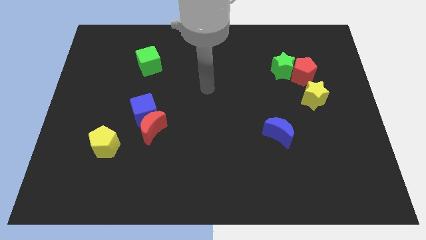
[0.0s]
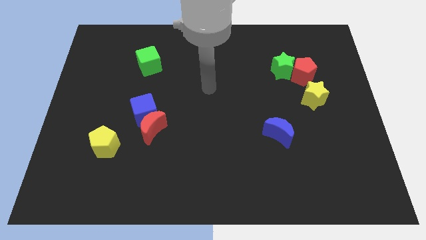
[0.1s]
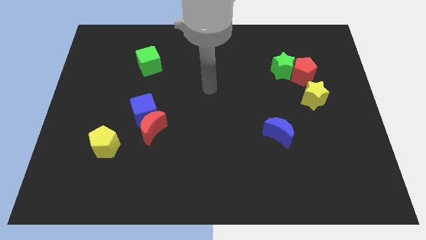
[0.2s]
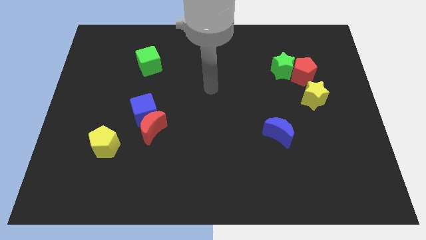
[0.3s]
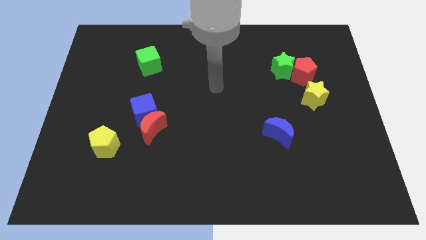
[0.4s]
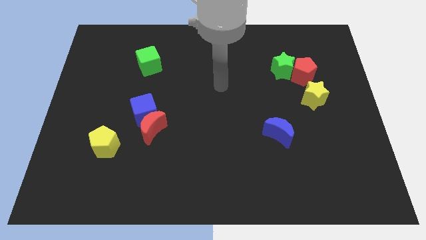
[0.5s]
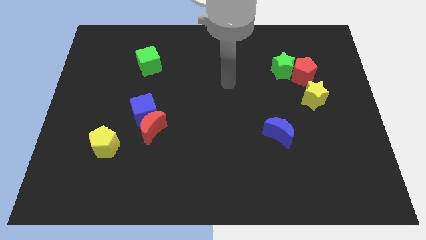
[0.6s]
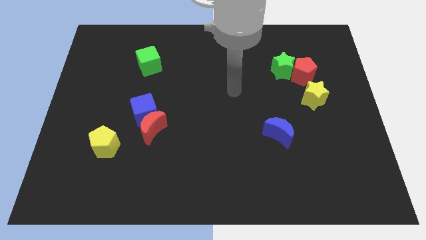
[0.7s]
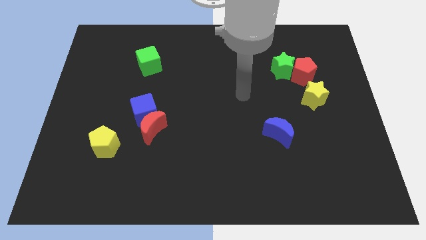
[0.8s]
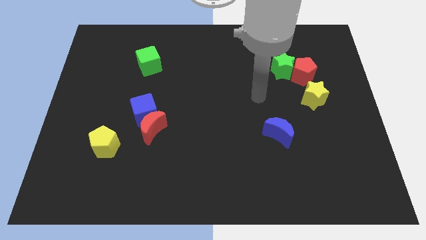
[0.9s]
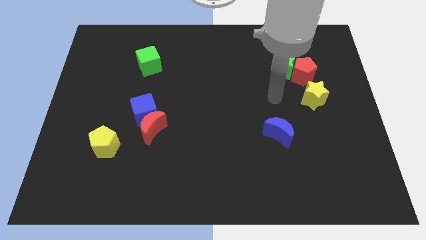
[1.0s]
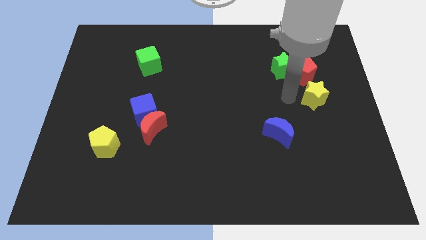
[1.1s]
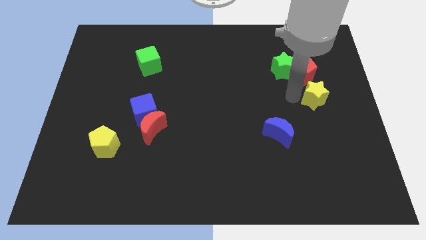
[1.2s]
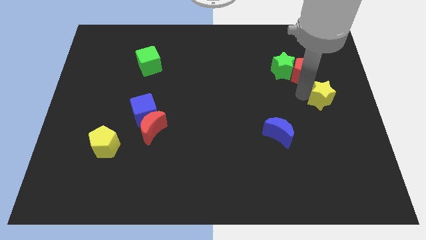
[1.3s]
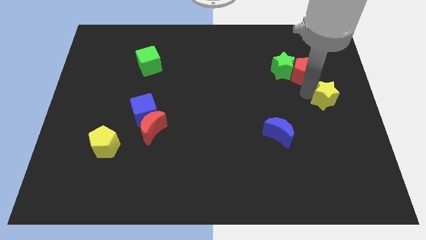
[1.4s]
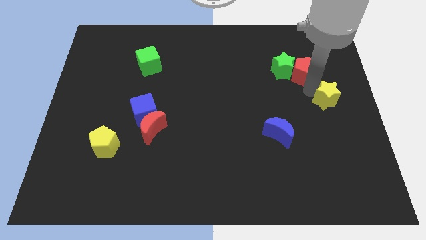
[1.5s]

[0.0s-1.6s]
hit the yellow star

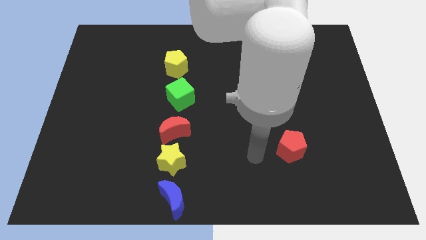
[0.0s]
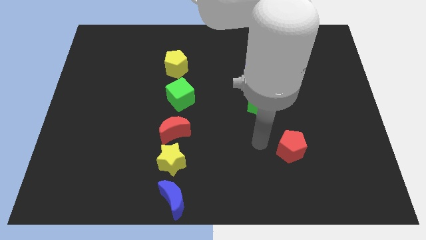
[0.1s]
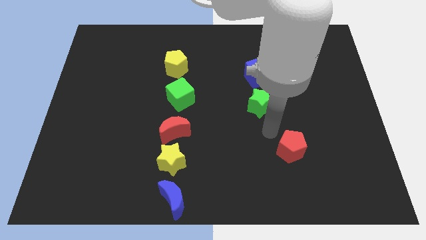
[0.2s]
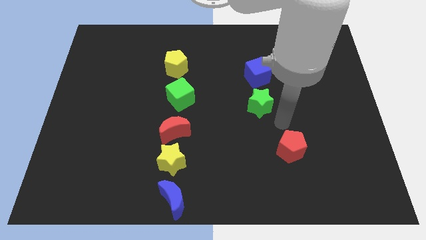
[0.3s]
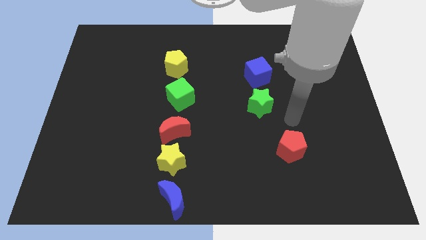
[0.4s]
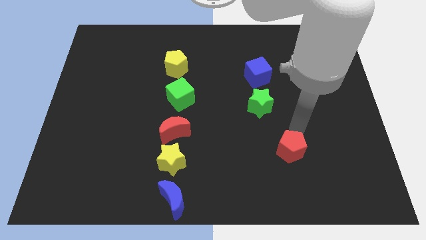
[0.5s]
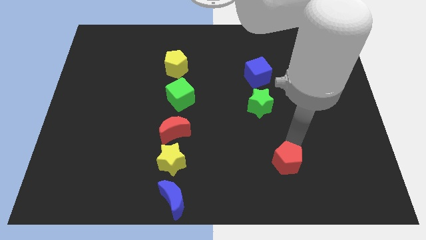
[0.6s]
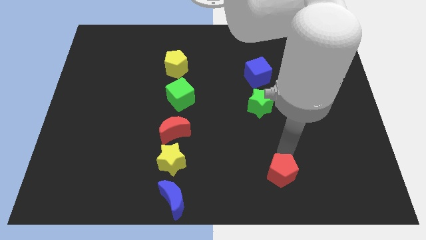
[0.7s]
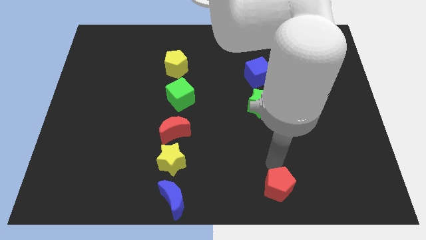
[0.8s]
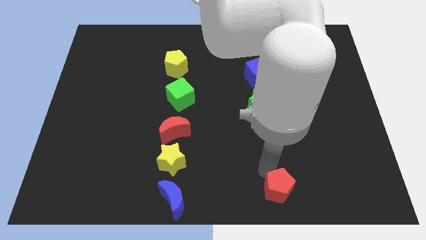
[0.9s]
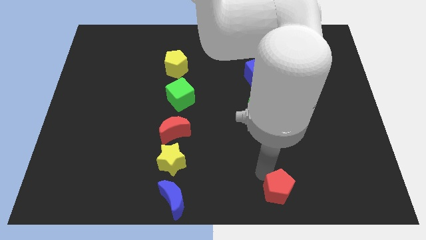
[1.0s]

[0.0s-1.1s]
place red pentagon to the bottom center of the board

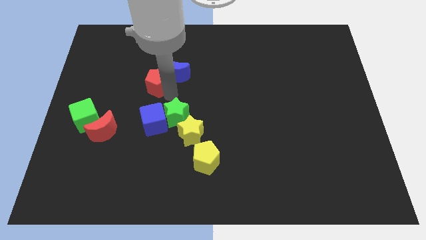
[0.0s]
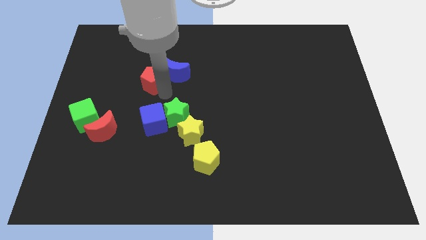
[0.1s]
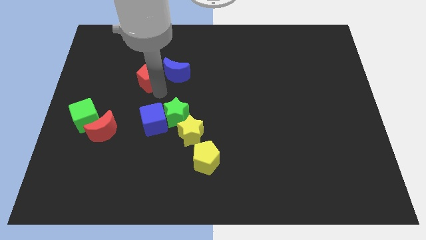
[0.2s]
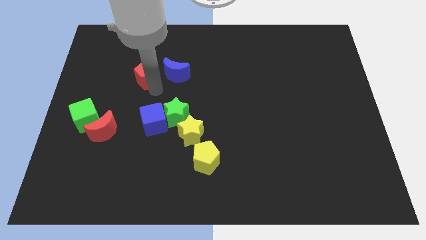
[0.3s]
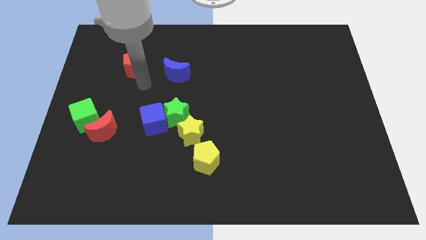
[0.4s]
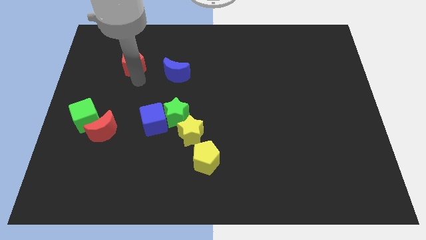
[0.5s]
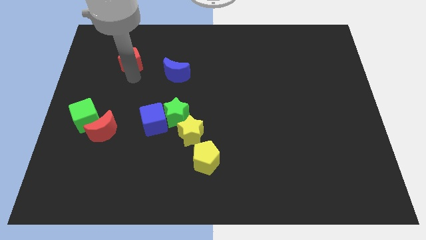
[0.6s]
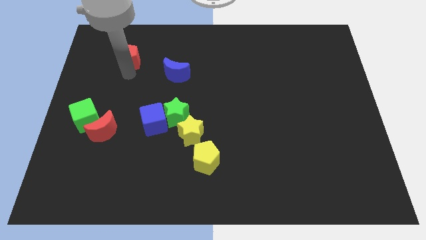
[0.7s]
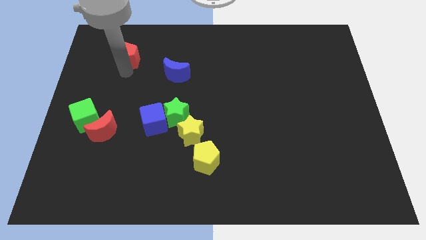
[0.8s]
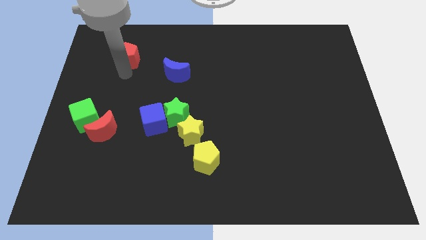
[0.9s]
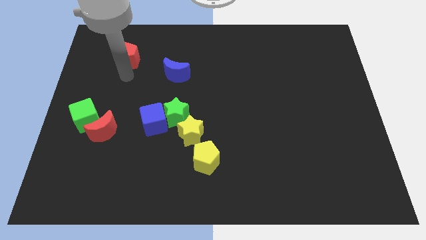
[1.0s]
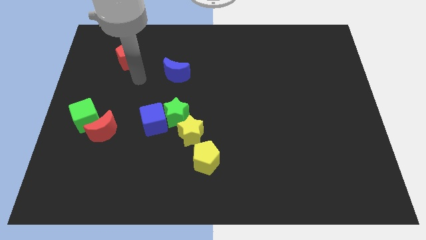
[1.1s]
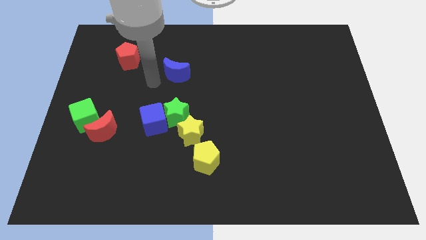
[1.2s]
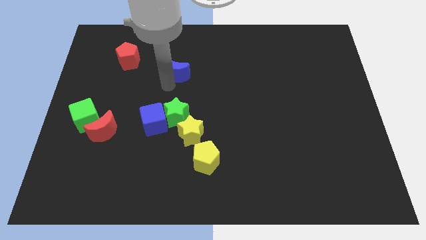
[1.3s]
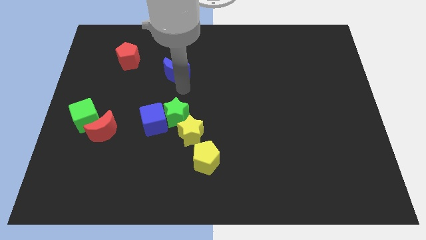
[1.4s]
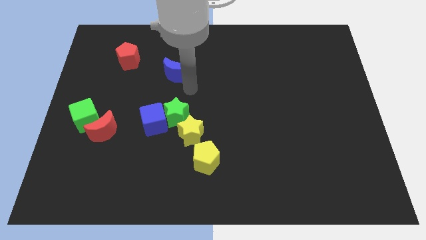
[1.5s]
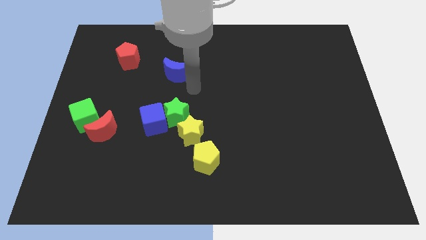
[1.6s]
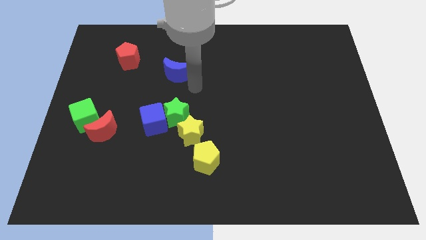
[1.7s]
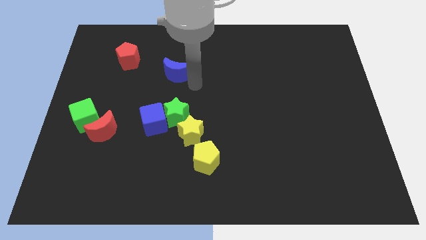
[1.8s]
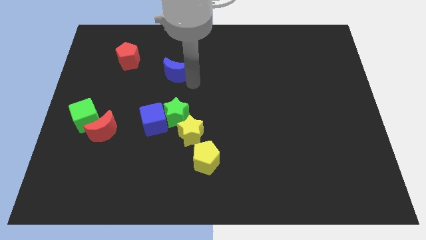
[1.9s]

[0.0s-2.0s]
place the red pentagon diagonally on the top left side of the blue moon

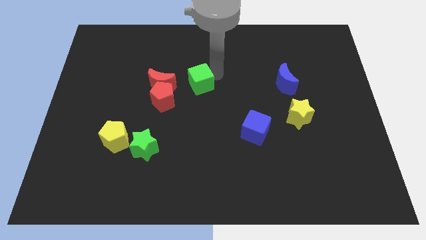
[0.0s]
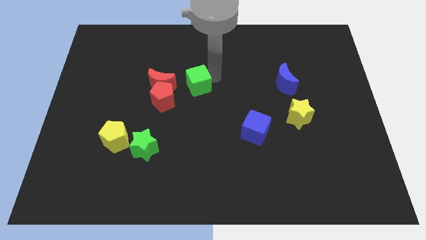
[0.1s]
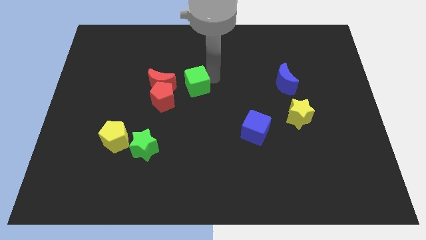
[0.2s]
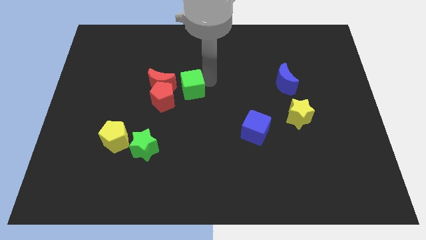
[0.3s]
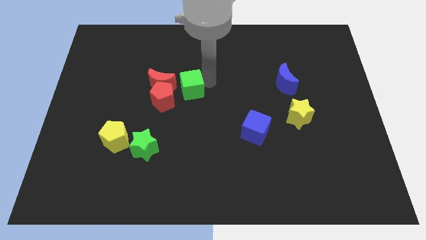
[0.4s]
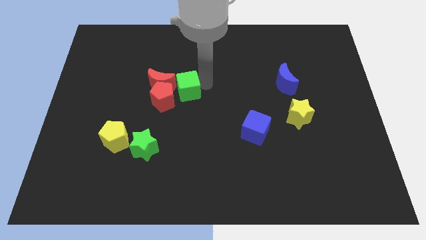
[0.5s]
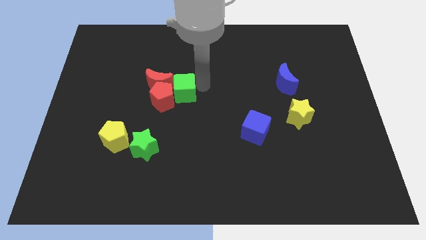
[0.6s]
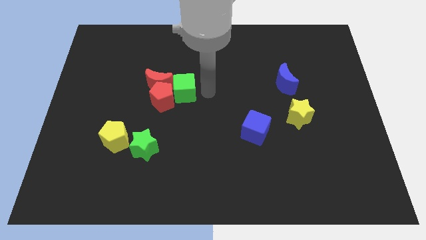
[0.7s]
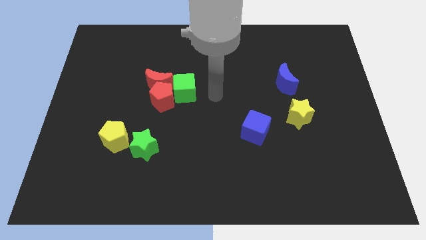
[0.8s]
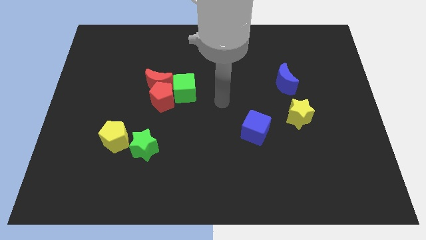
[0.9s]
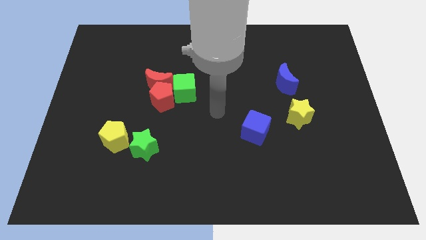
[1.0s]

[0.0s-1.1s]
put the green cube to the right side of red blocks

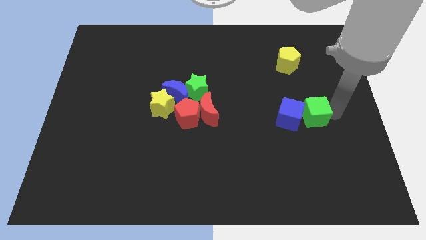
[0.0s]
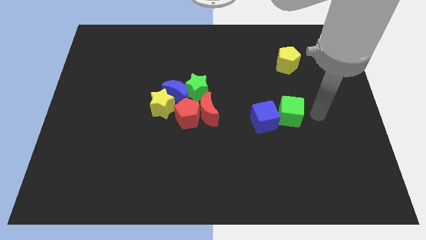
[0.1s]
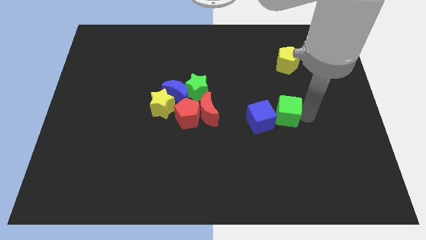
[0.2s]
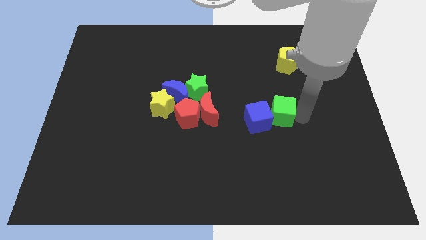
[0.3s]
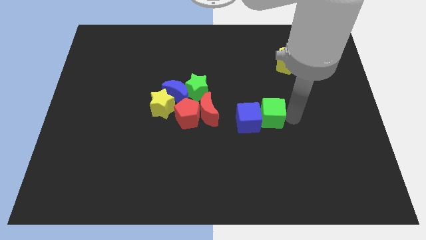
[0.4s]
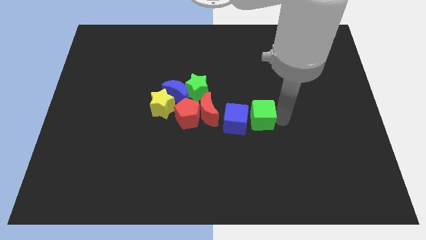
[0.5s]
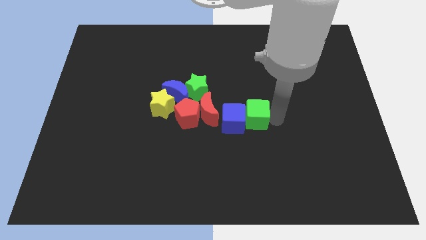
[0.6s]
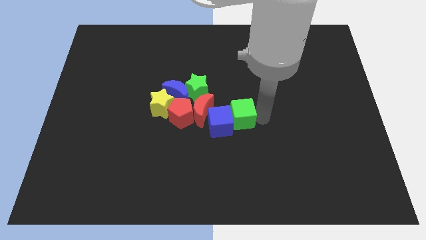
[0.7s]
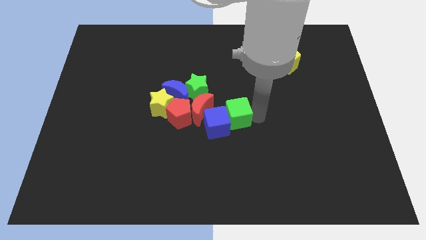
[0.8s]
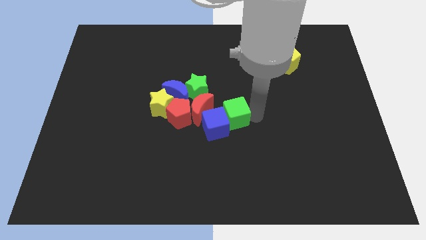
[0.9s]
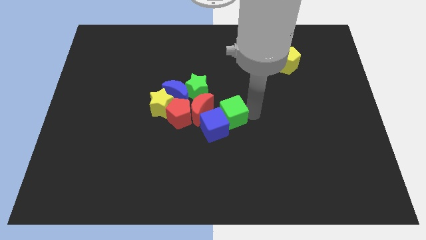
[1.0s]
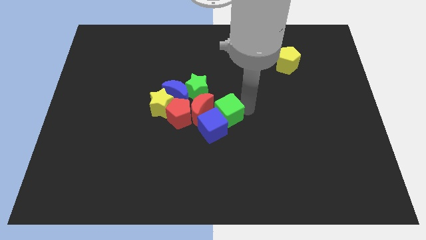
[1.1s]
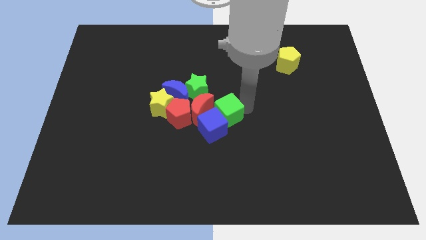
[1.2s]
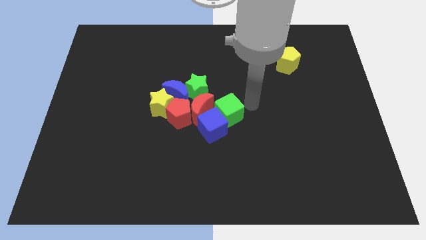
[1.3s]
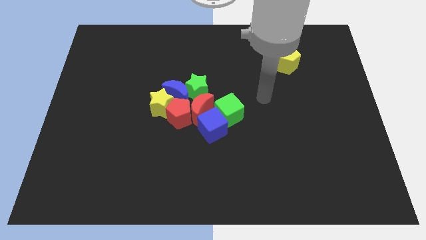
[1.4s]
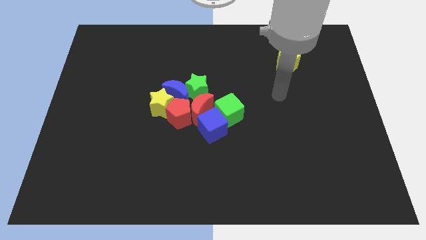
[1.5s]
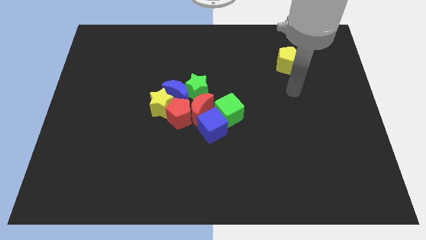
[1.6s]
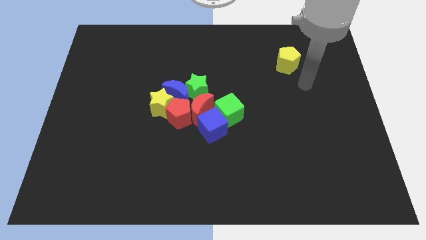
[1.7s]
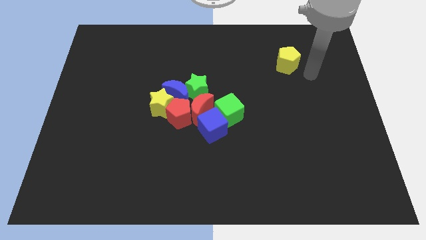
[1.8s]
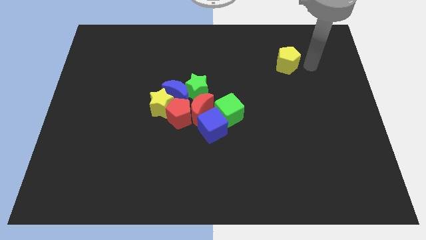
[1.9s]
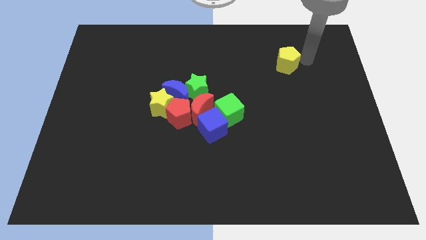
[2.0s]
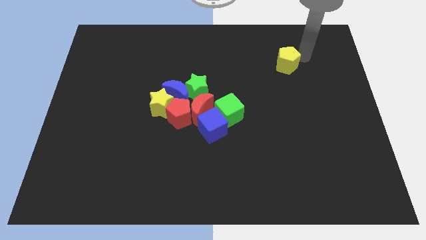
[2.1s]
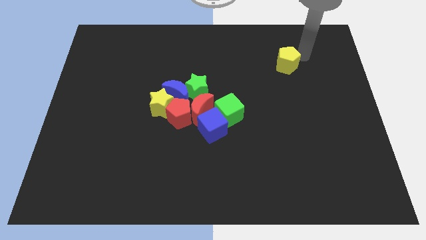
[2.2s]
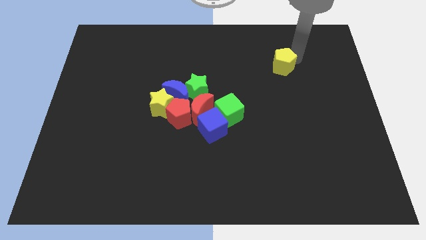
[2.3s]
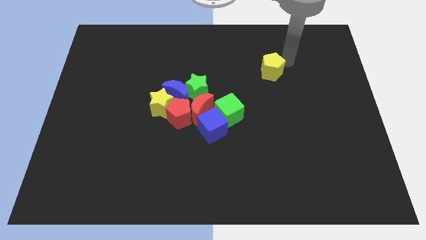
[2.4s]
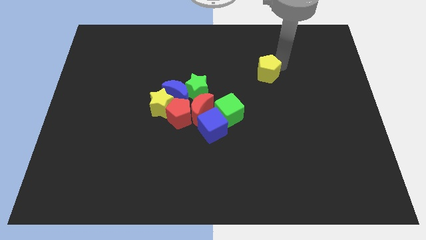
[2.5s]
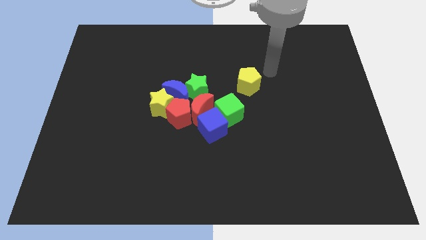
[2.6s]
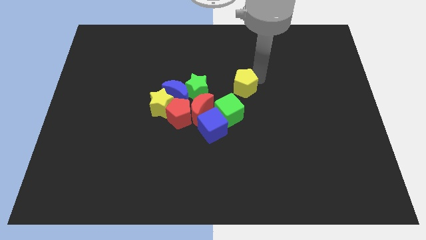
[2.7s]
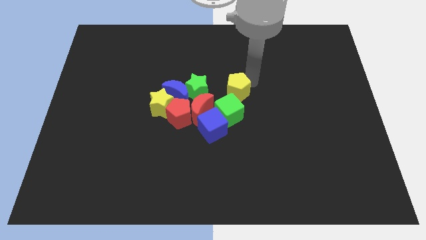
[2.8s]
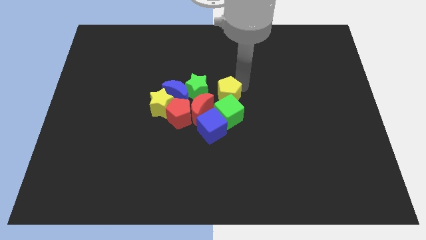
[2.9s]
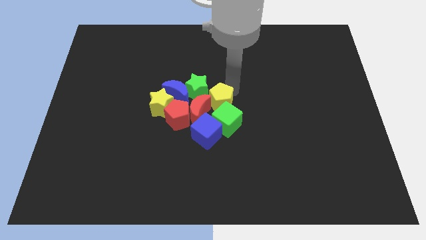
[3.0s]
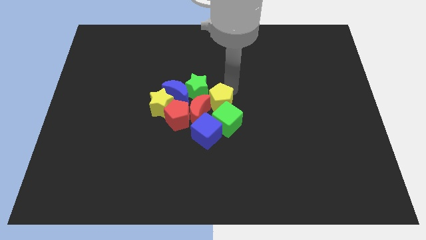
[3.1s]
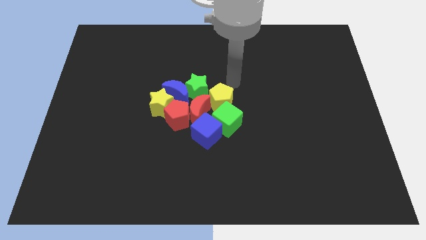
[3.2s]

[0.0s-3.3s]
group up the all blocks at the center of the board
